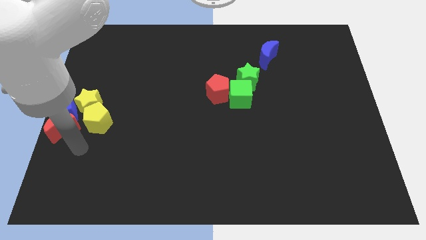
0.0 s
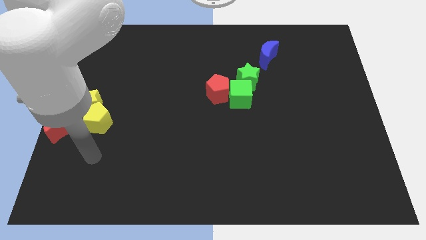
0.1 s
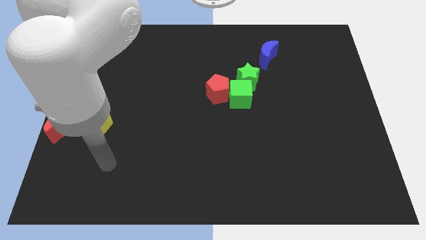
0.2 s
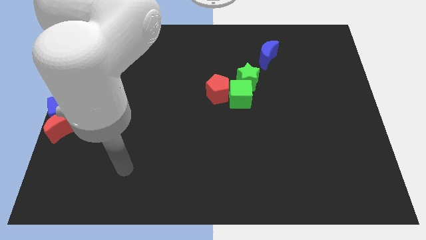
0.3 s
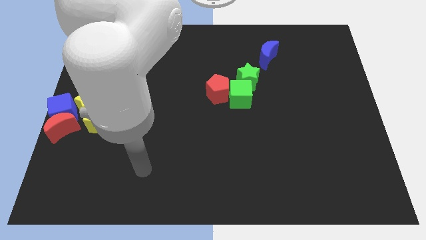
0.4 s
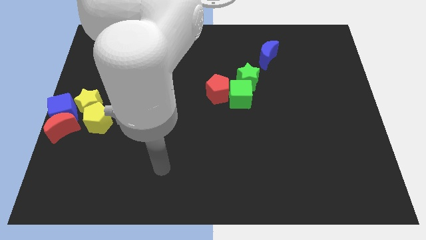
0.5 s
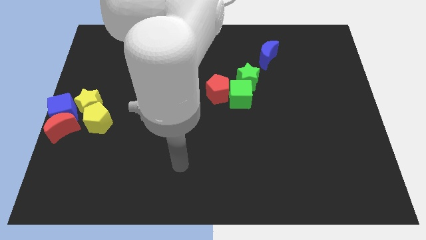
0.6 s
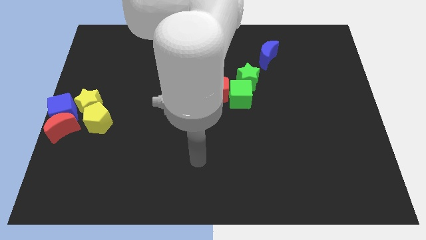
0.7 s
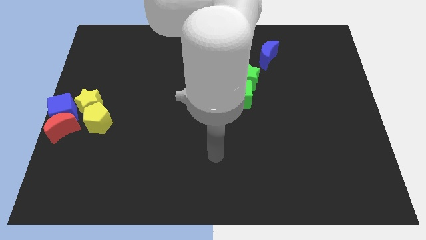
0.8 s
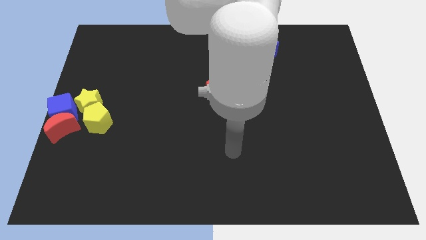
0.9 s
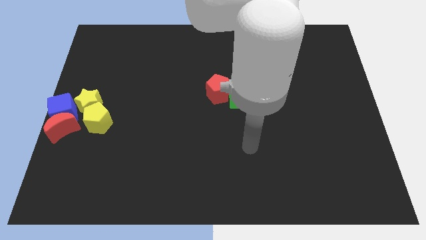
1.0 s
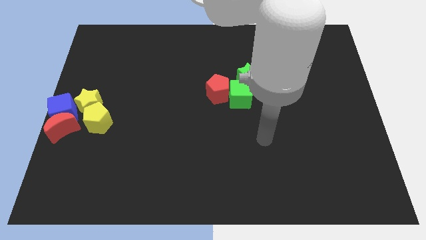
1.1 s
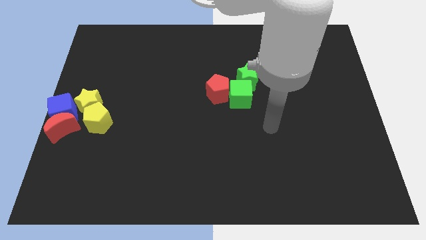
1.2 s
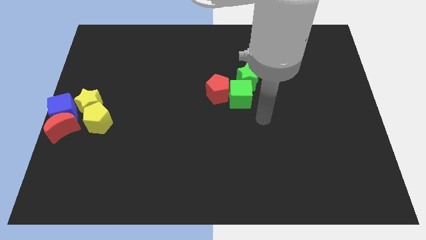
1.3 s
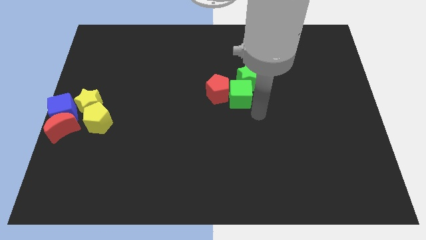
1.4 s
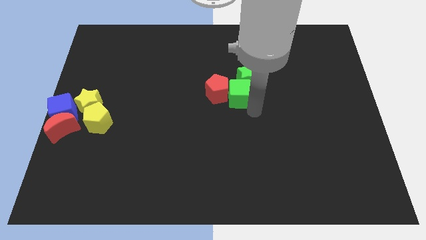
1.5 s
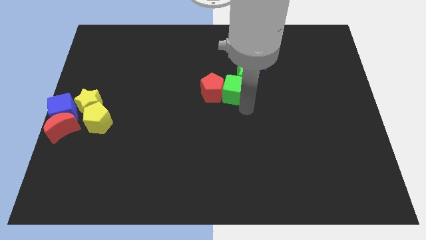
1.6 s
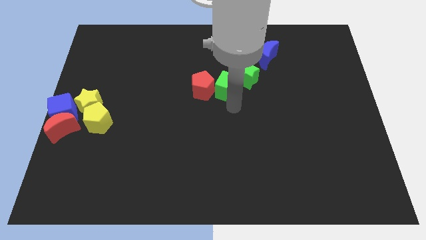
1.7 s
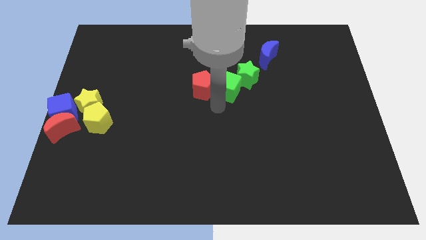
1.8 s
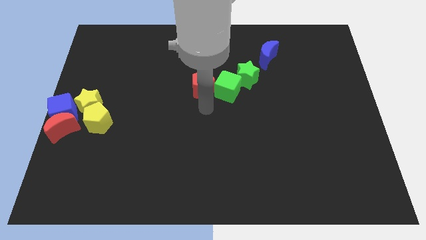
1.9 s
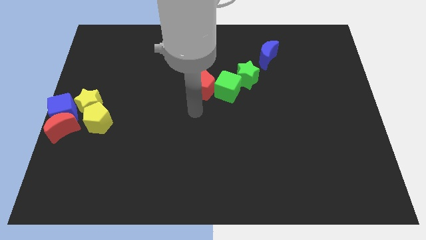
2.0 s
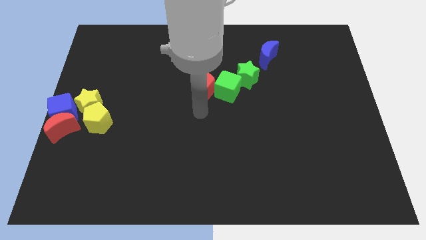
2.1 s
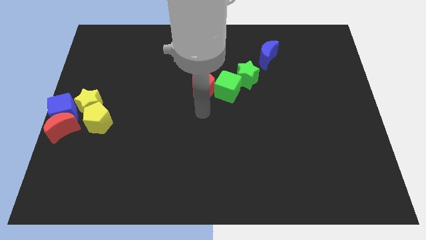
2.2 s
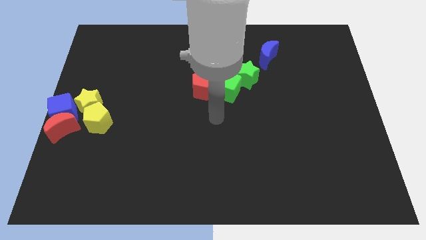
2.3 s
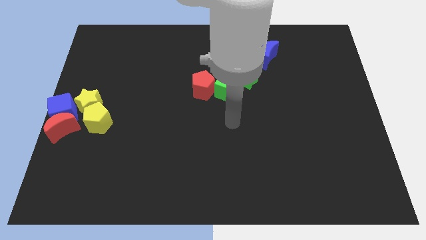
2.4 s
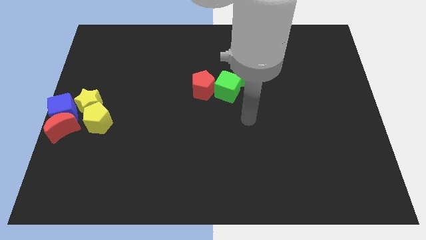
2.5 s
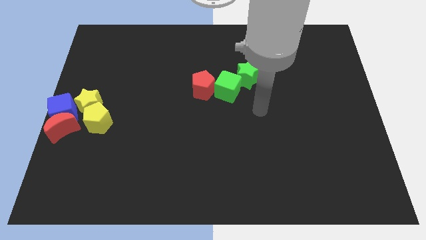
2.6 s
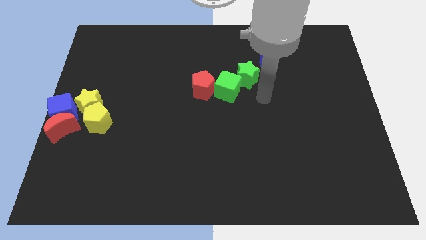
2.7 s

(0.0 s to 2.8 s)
move the arm to the right of the green cube

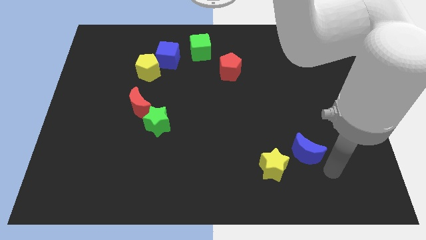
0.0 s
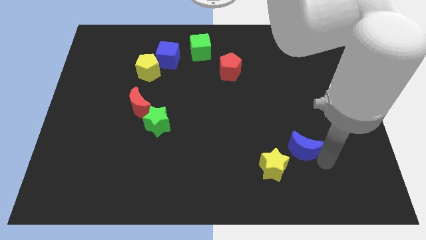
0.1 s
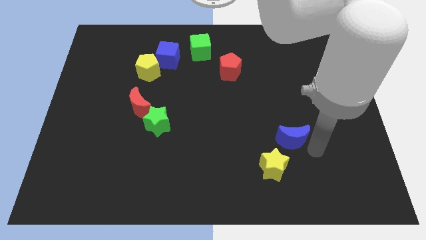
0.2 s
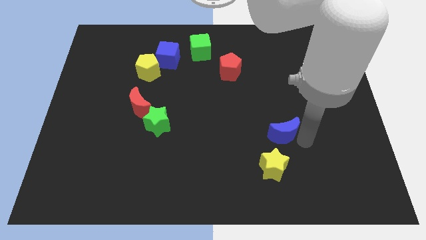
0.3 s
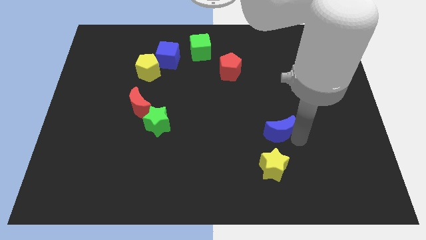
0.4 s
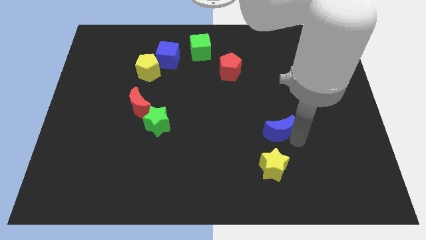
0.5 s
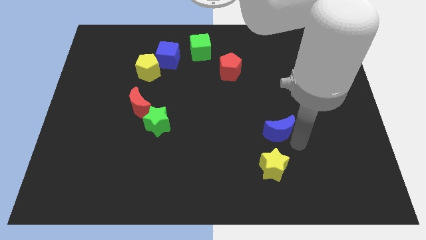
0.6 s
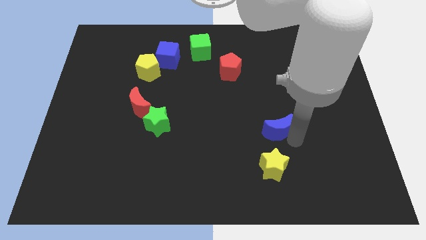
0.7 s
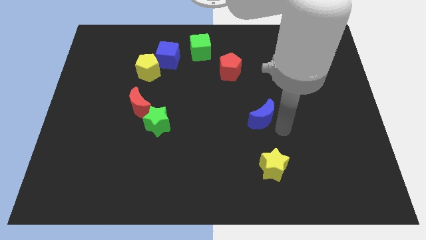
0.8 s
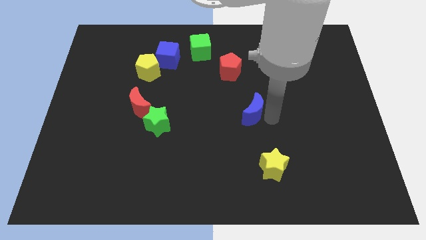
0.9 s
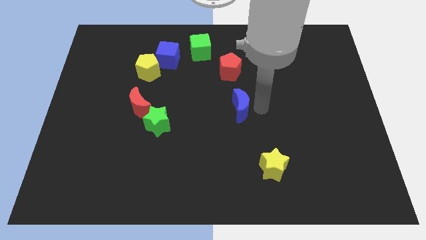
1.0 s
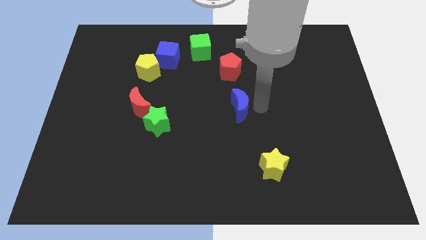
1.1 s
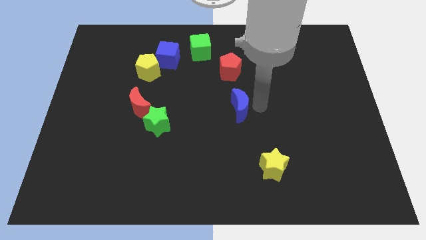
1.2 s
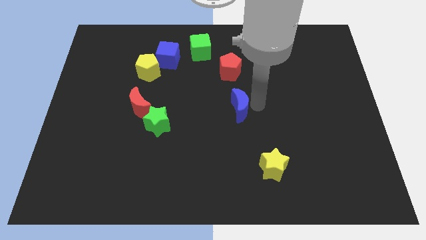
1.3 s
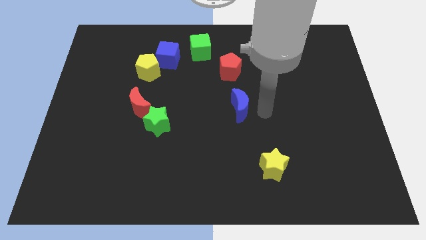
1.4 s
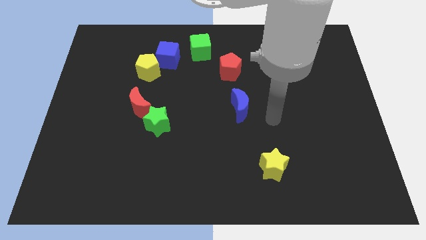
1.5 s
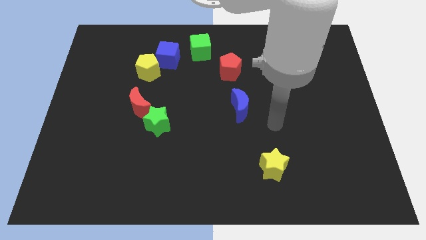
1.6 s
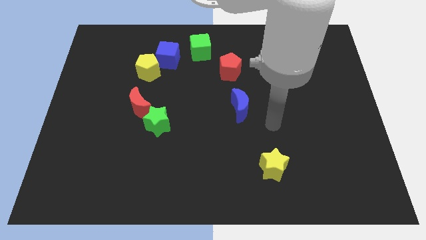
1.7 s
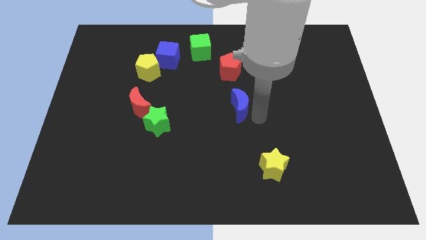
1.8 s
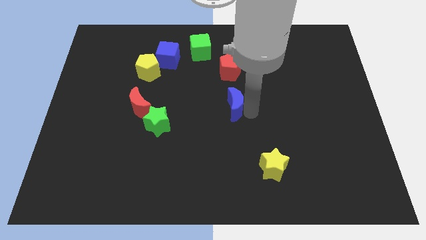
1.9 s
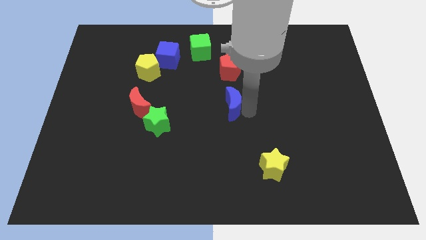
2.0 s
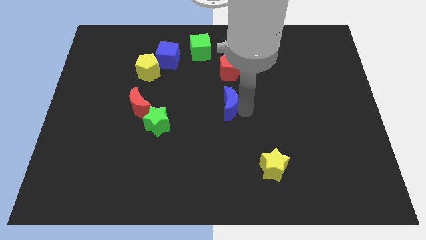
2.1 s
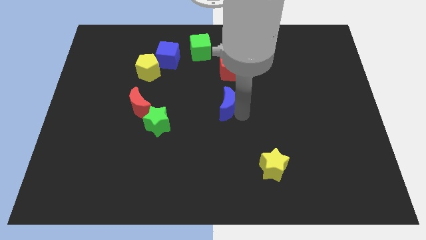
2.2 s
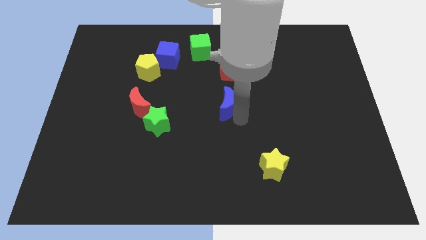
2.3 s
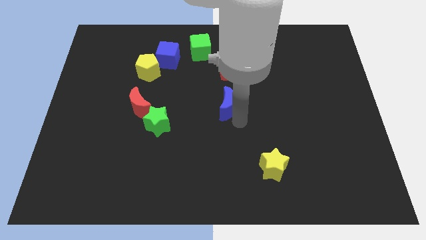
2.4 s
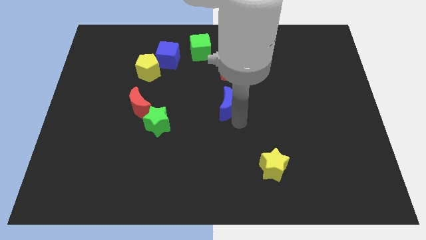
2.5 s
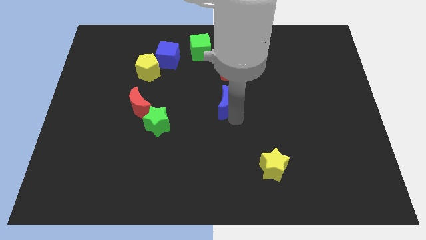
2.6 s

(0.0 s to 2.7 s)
place the blue crescent in the circle forming below the red pentagon

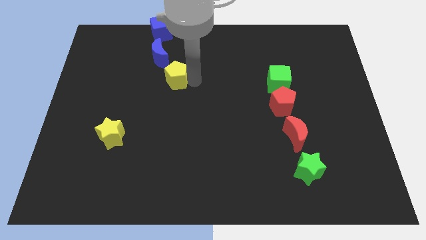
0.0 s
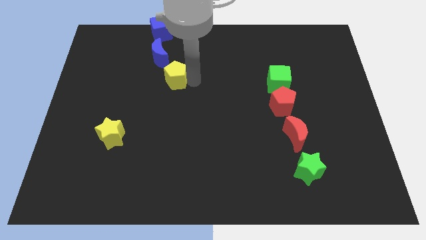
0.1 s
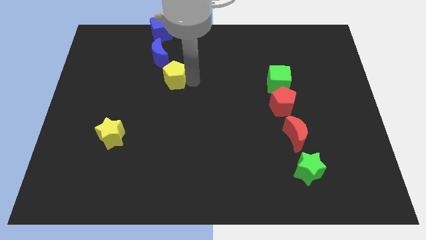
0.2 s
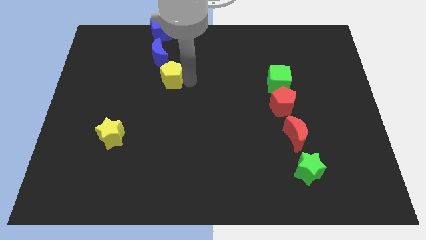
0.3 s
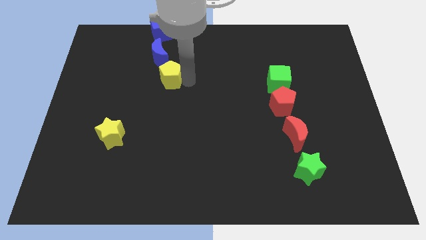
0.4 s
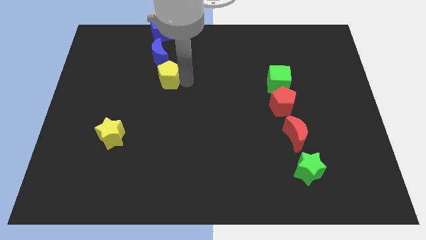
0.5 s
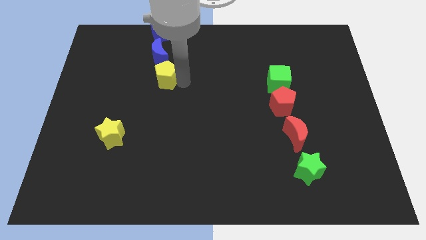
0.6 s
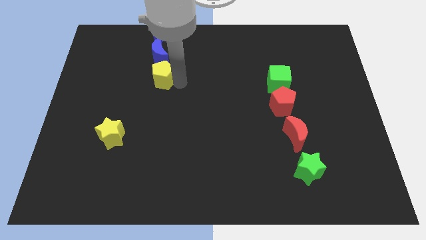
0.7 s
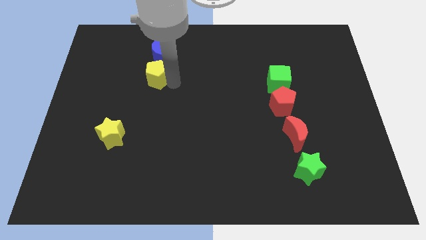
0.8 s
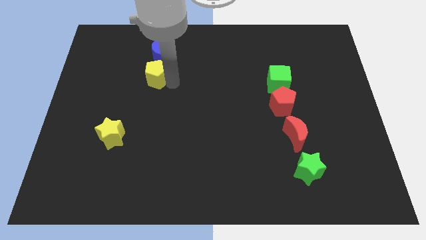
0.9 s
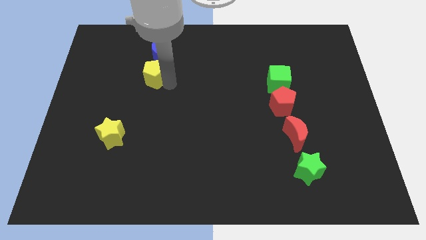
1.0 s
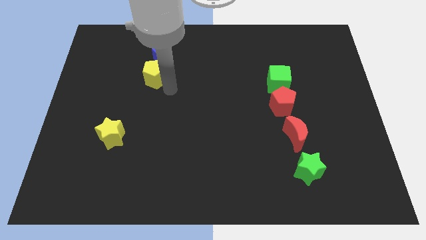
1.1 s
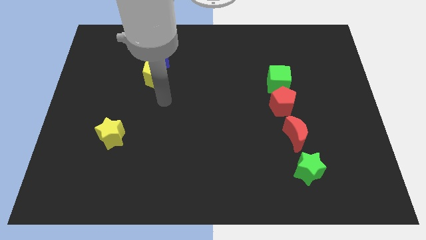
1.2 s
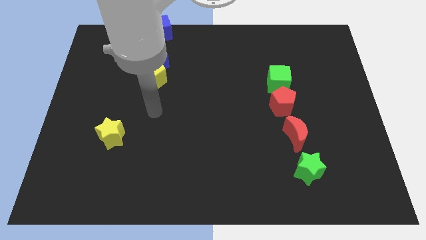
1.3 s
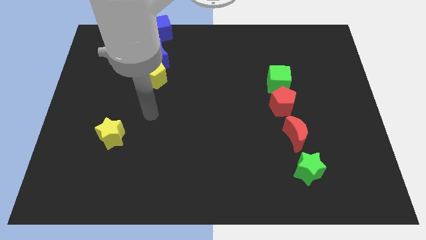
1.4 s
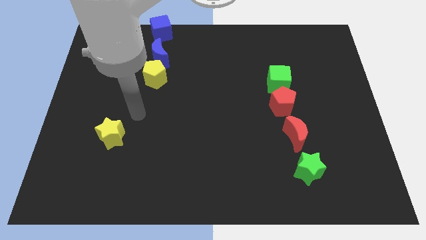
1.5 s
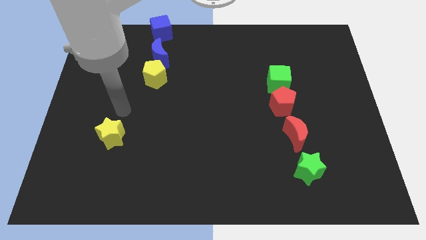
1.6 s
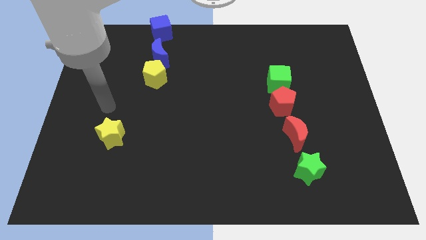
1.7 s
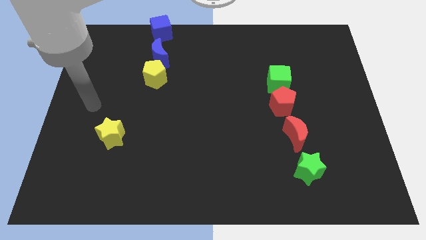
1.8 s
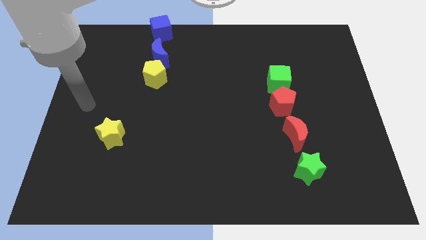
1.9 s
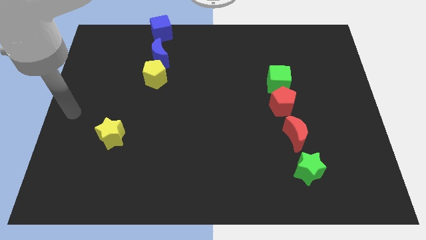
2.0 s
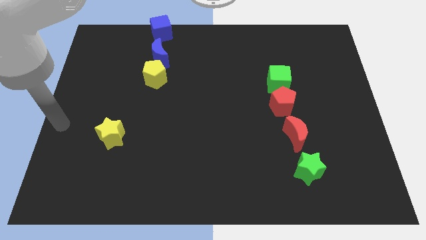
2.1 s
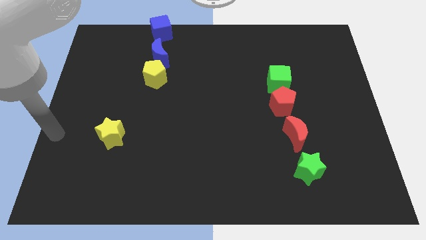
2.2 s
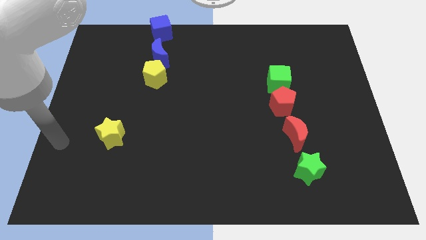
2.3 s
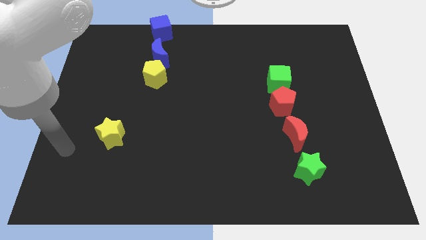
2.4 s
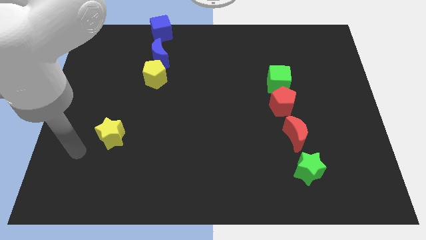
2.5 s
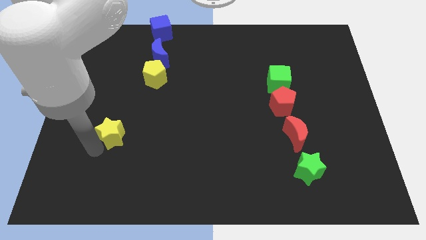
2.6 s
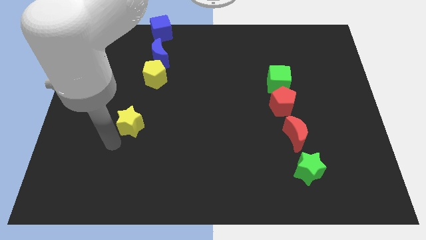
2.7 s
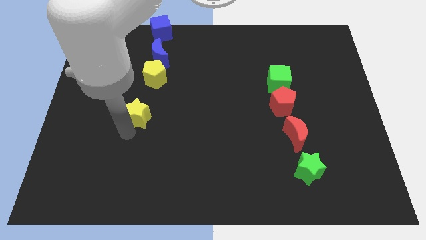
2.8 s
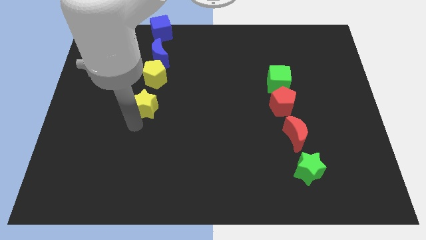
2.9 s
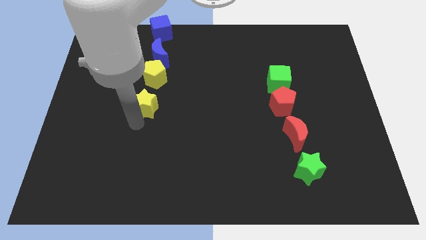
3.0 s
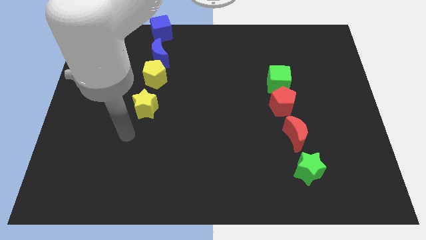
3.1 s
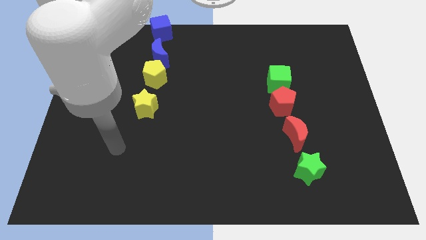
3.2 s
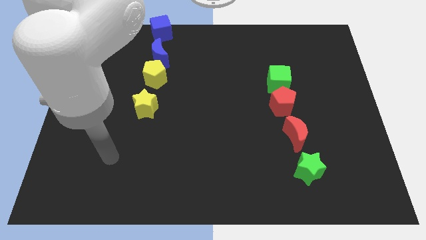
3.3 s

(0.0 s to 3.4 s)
move the yellow pentagon and the yellow star vertical to each other
